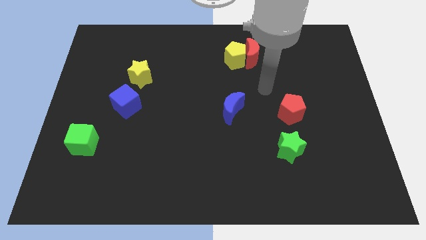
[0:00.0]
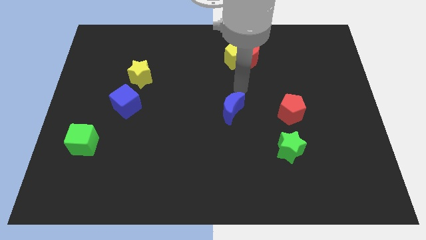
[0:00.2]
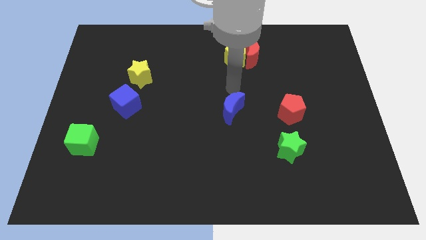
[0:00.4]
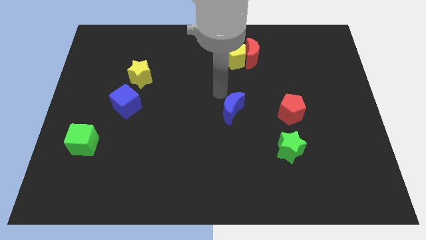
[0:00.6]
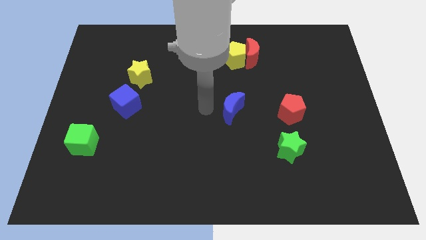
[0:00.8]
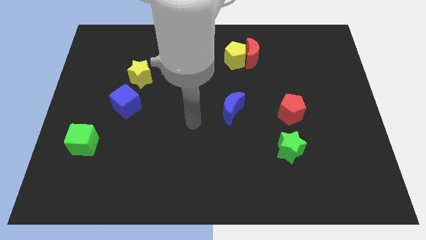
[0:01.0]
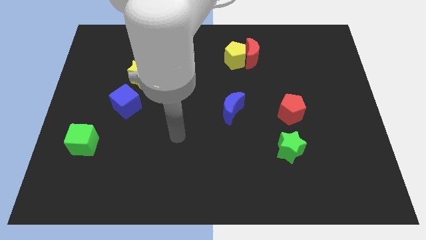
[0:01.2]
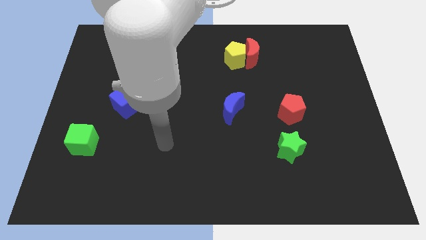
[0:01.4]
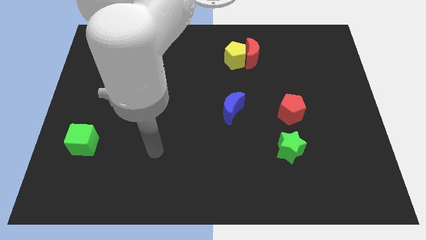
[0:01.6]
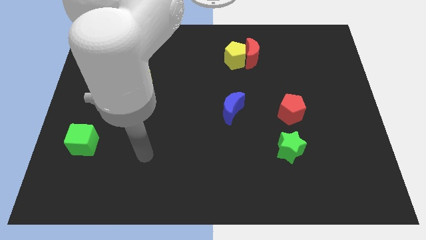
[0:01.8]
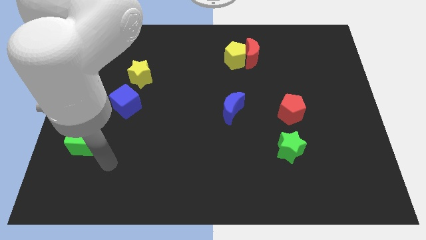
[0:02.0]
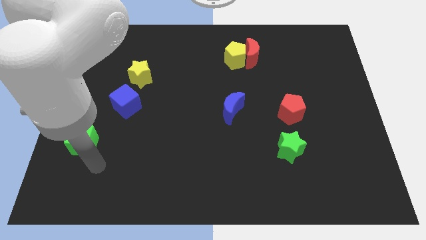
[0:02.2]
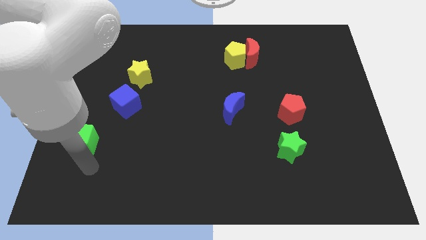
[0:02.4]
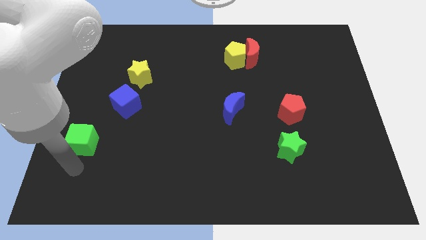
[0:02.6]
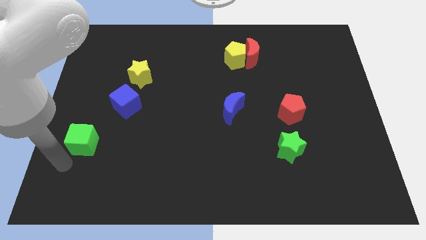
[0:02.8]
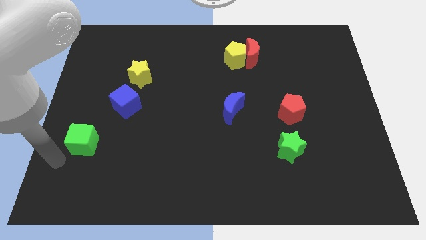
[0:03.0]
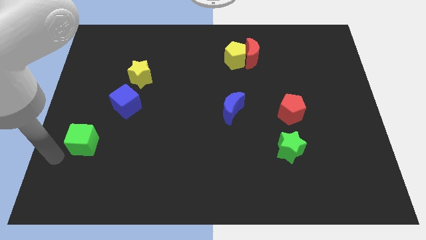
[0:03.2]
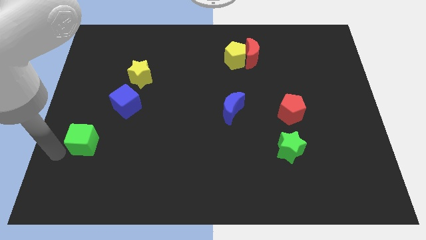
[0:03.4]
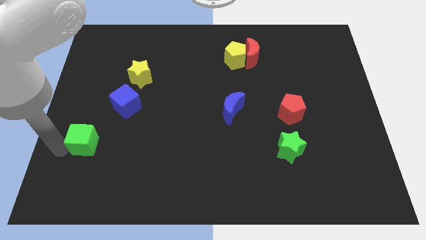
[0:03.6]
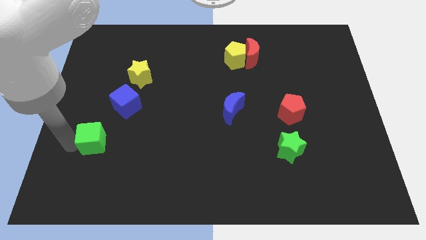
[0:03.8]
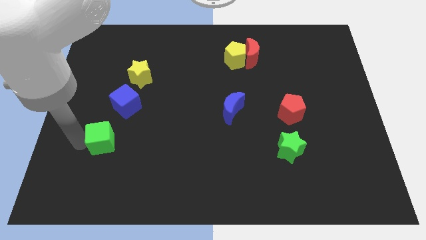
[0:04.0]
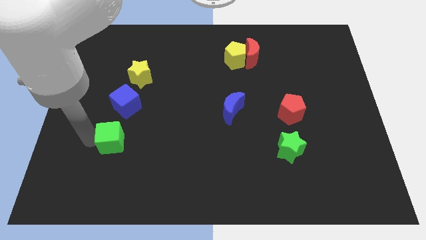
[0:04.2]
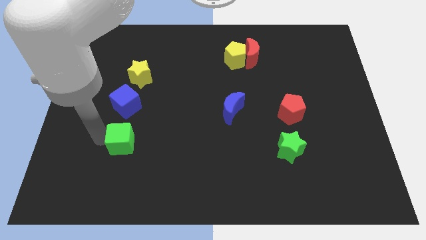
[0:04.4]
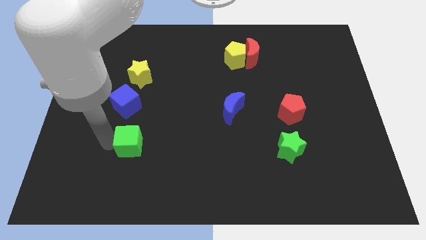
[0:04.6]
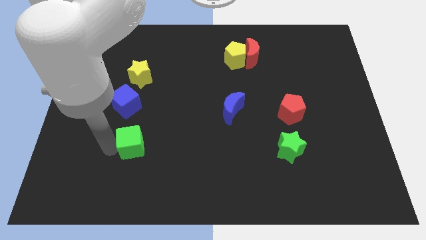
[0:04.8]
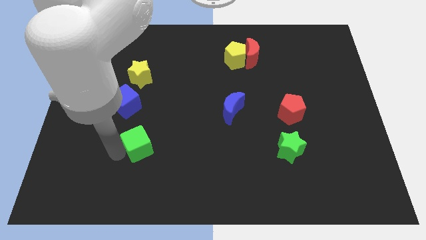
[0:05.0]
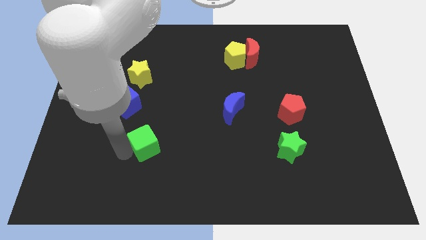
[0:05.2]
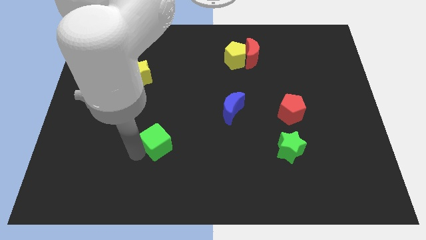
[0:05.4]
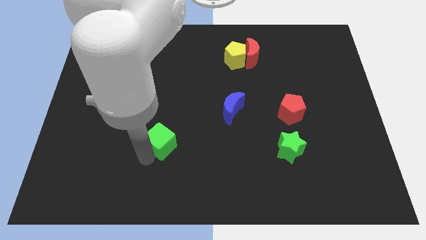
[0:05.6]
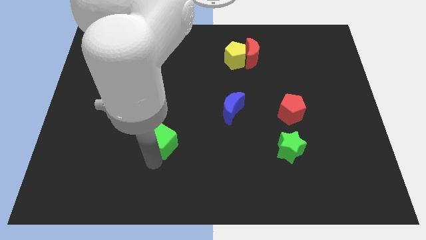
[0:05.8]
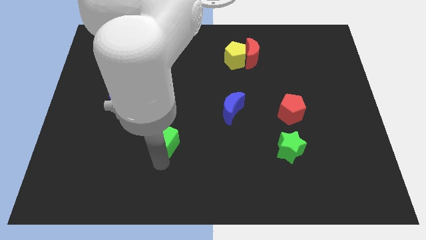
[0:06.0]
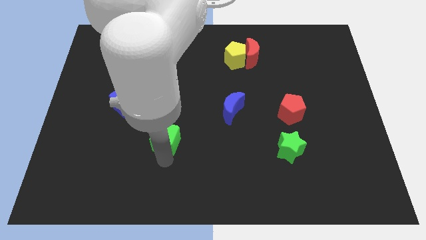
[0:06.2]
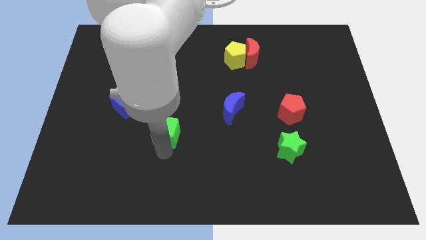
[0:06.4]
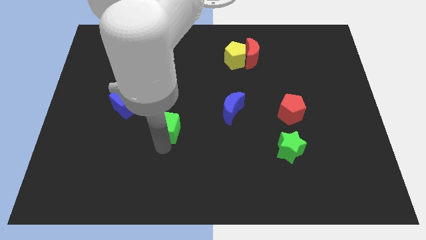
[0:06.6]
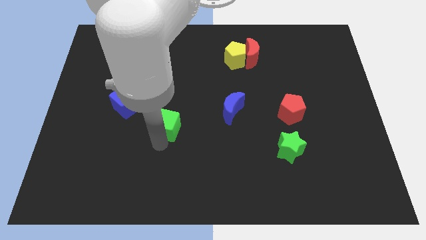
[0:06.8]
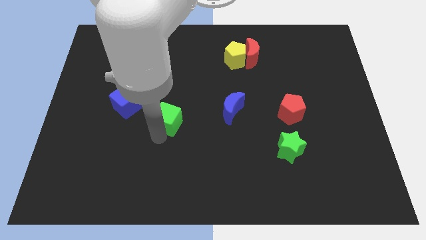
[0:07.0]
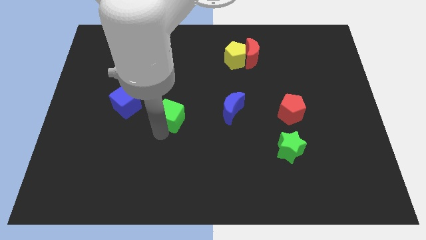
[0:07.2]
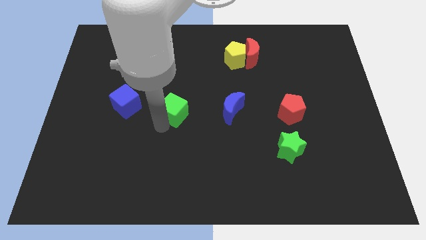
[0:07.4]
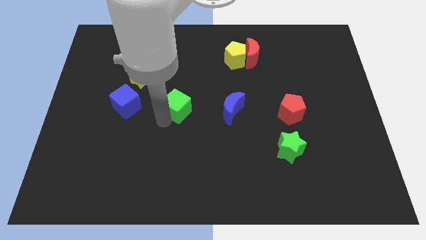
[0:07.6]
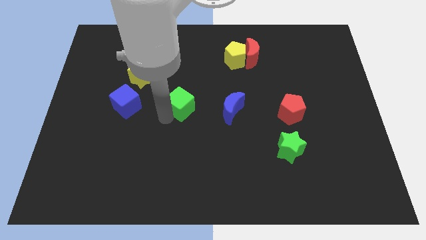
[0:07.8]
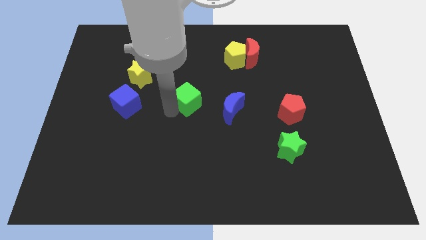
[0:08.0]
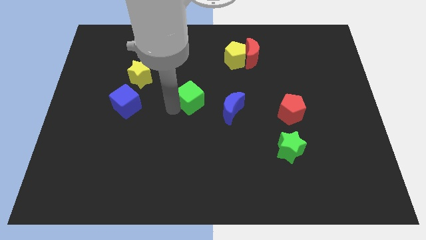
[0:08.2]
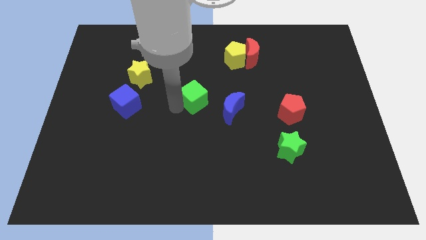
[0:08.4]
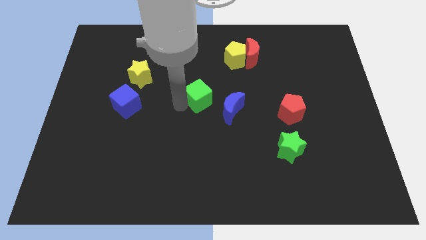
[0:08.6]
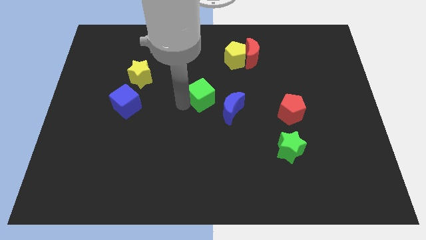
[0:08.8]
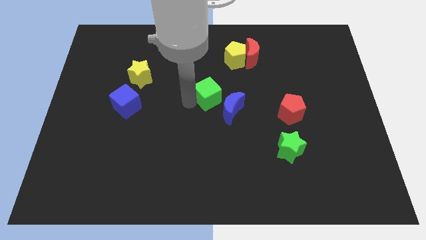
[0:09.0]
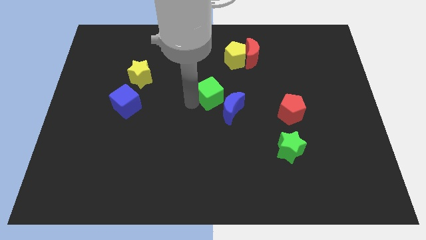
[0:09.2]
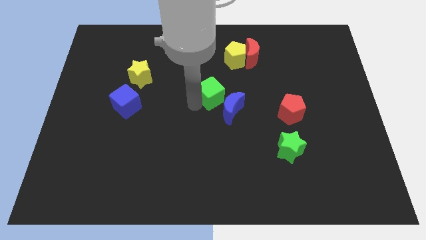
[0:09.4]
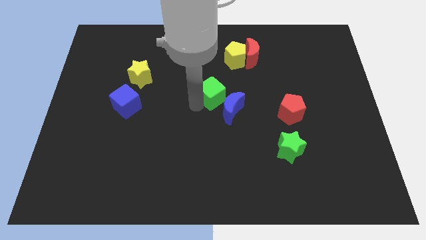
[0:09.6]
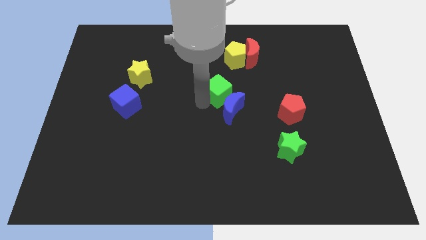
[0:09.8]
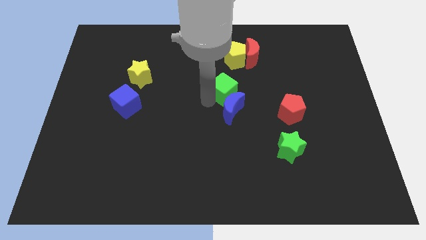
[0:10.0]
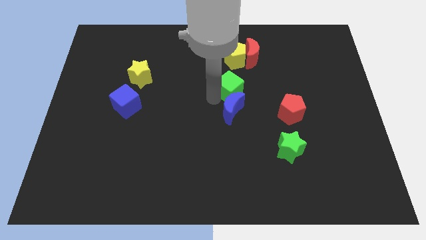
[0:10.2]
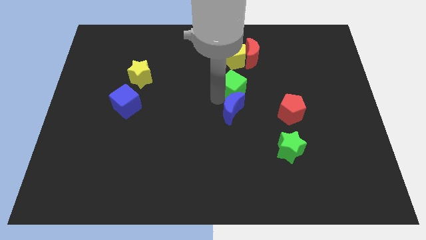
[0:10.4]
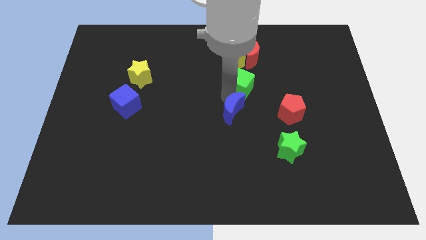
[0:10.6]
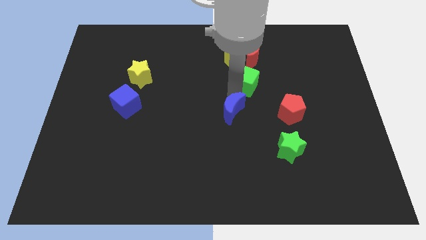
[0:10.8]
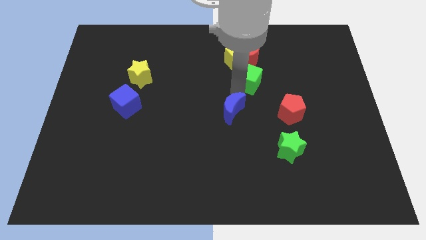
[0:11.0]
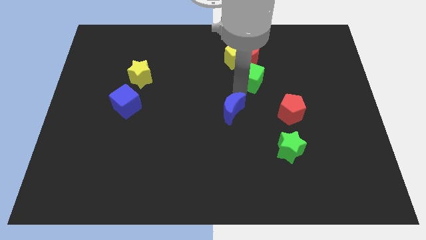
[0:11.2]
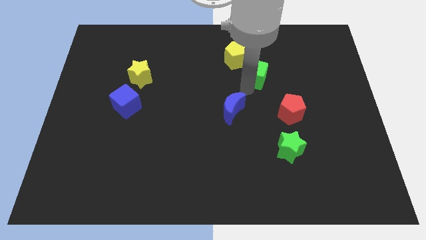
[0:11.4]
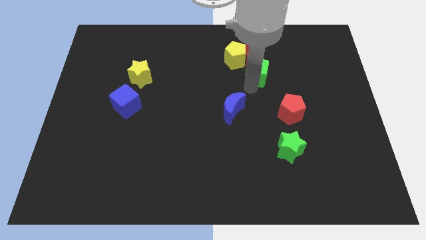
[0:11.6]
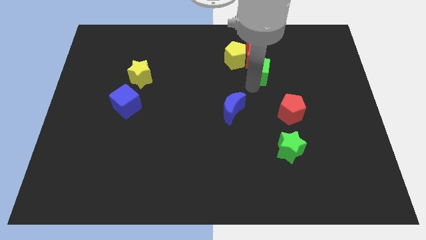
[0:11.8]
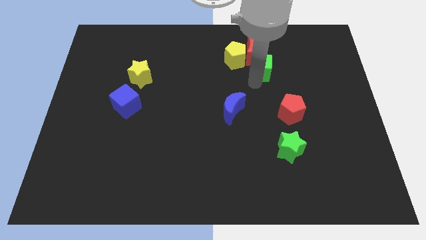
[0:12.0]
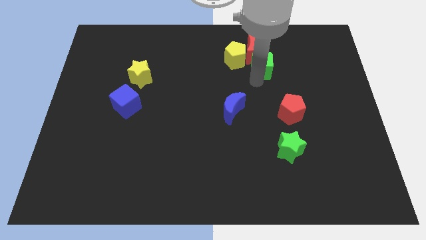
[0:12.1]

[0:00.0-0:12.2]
move the green cube next to the red moon

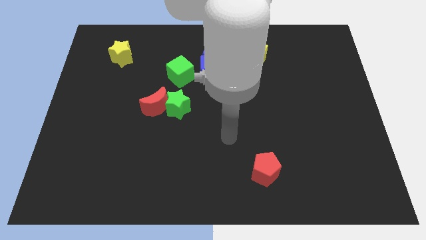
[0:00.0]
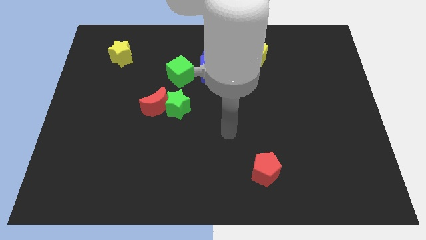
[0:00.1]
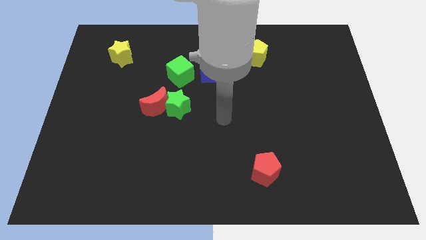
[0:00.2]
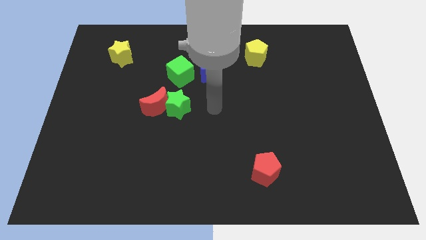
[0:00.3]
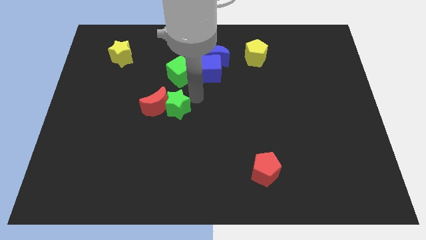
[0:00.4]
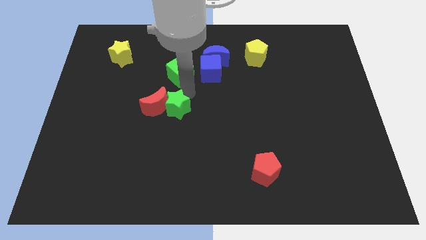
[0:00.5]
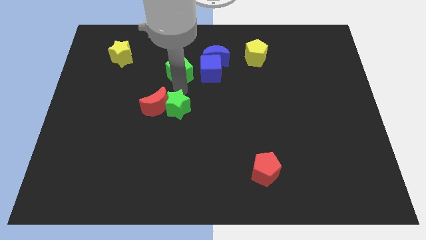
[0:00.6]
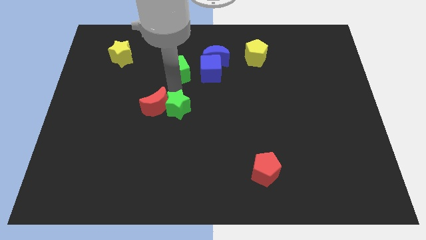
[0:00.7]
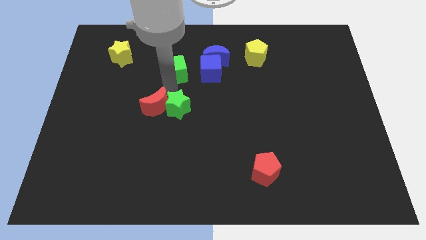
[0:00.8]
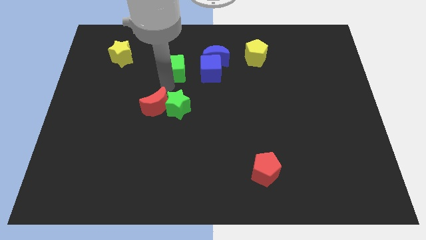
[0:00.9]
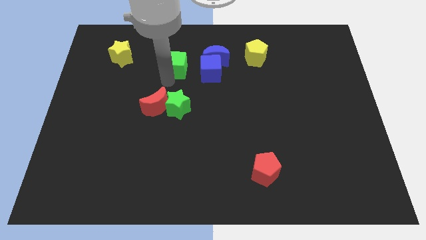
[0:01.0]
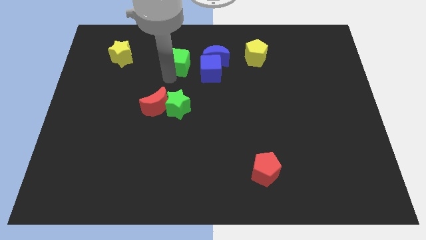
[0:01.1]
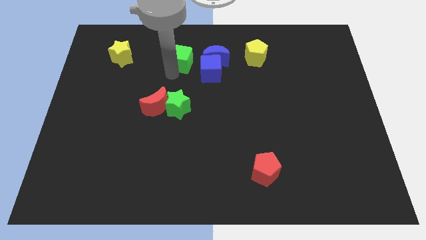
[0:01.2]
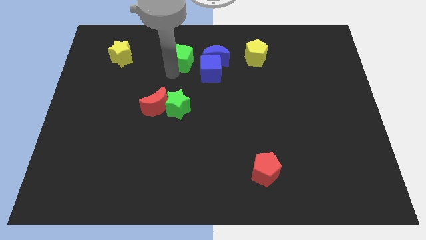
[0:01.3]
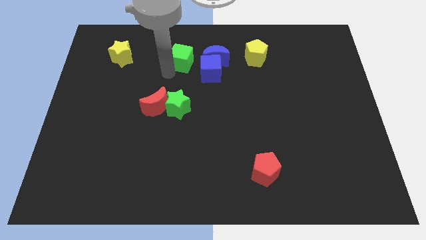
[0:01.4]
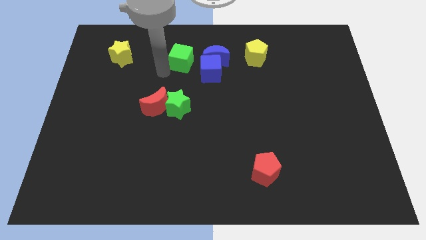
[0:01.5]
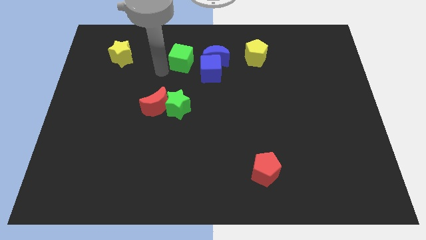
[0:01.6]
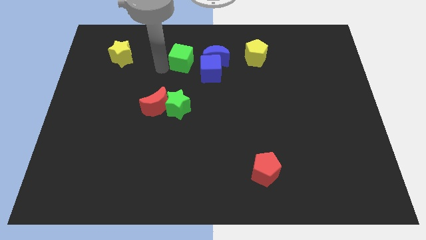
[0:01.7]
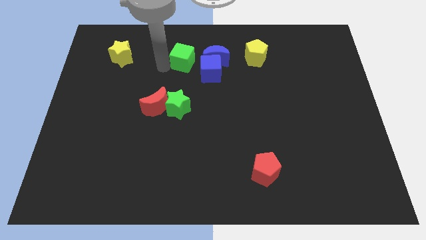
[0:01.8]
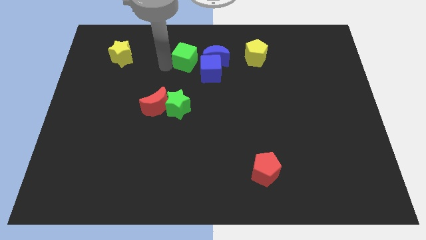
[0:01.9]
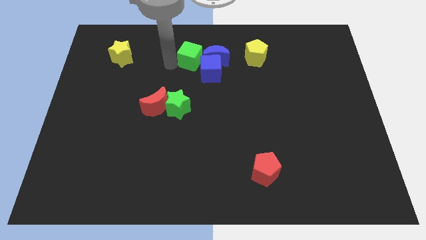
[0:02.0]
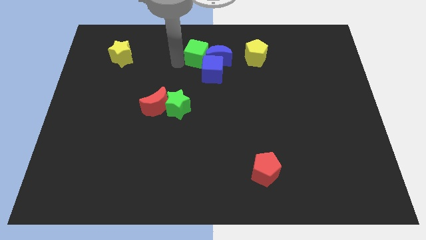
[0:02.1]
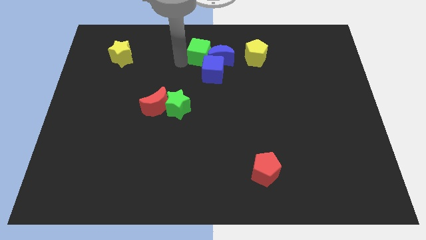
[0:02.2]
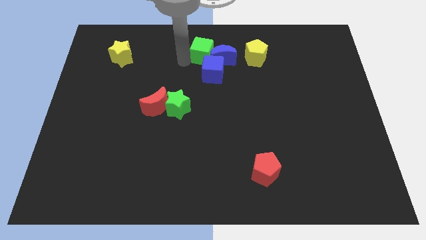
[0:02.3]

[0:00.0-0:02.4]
slide the green cube to the blue moon

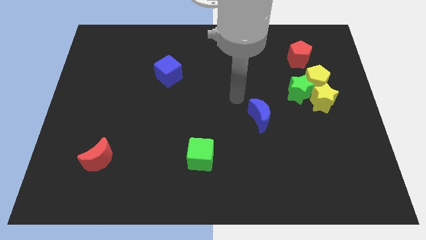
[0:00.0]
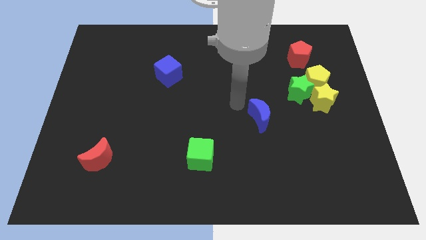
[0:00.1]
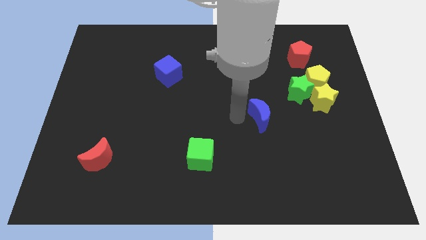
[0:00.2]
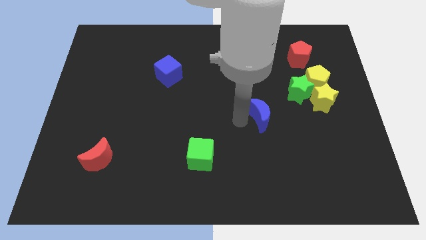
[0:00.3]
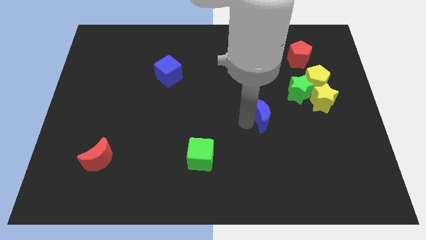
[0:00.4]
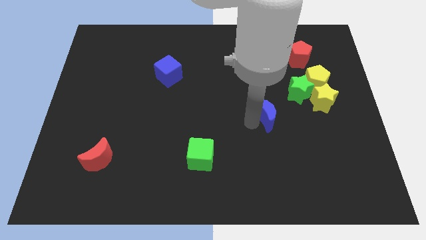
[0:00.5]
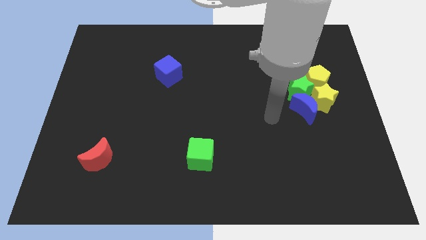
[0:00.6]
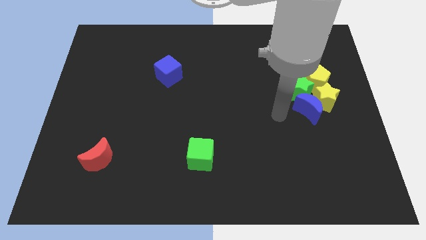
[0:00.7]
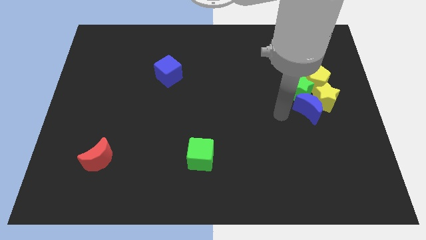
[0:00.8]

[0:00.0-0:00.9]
move the blue moon close to the yellow star
